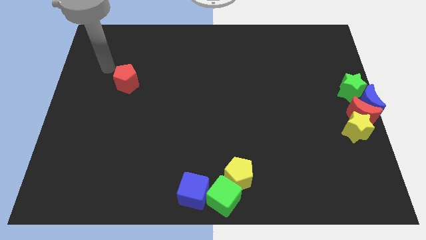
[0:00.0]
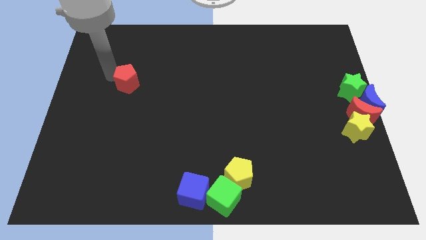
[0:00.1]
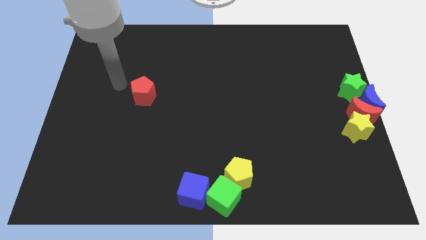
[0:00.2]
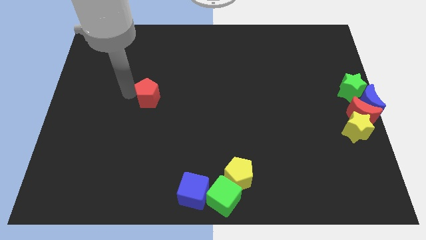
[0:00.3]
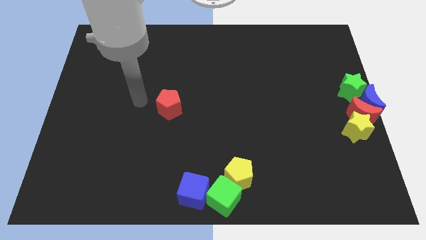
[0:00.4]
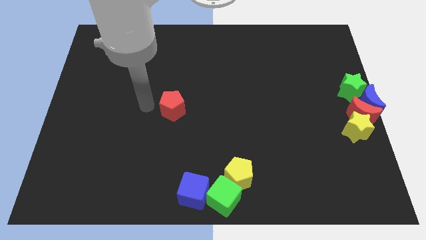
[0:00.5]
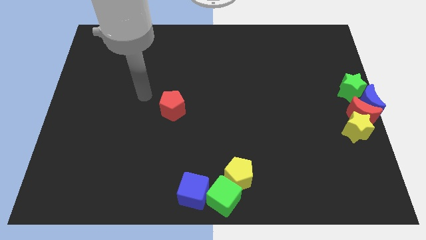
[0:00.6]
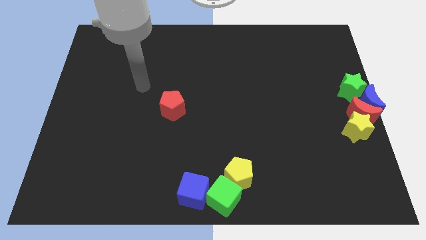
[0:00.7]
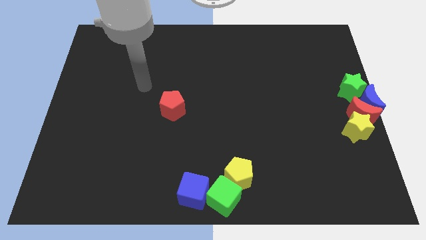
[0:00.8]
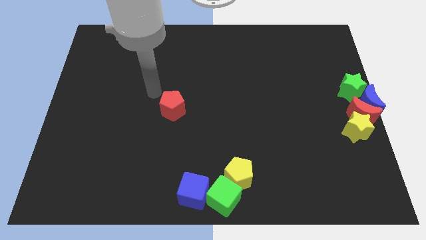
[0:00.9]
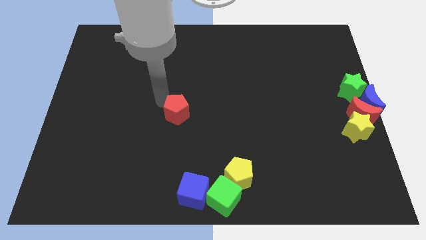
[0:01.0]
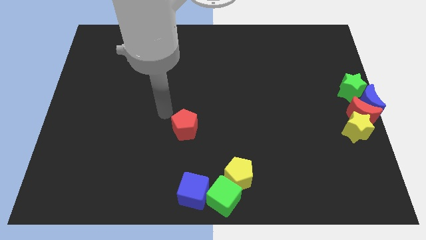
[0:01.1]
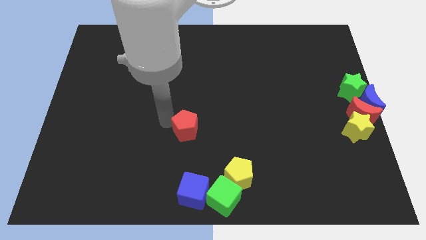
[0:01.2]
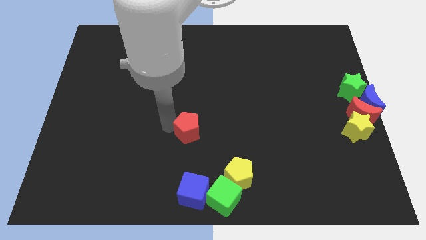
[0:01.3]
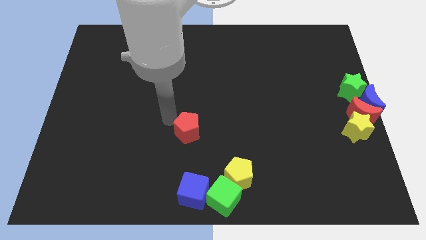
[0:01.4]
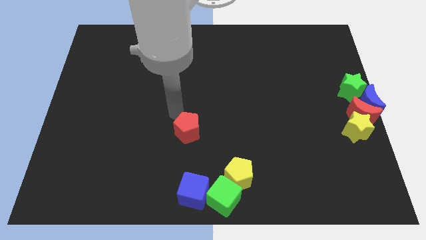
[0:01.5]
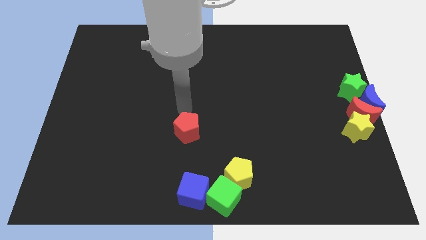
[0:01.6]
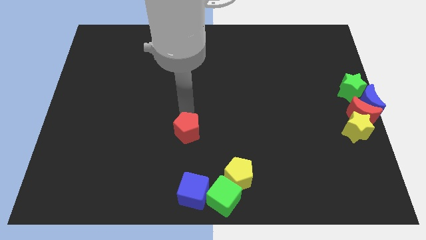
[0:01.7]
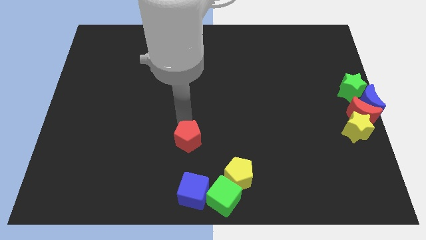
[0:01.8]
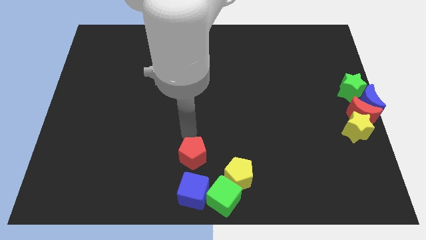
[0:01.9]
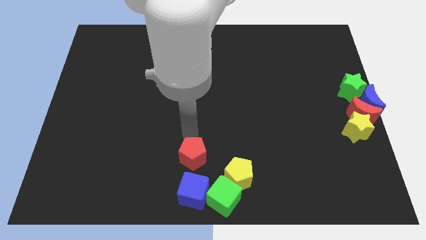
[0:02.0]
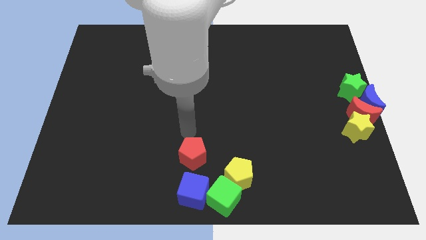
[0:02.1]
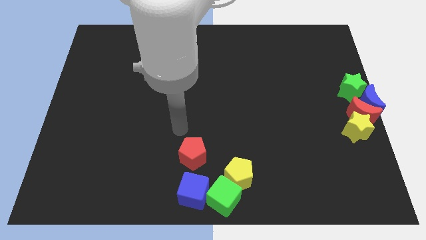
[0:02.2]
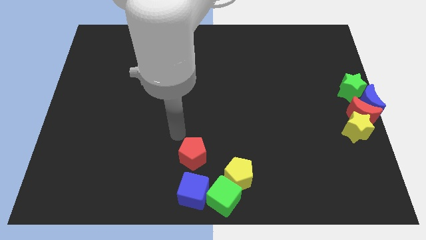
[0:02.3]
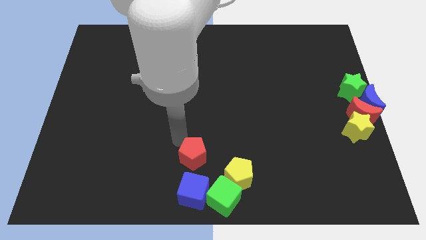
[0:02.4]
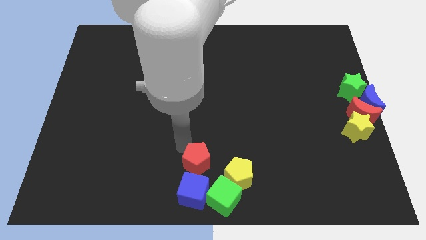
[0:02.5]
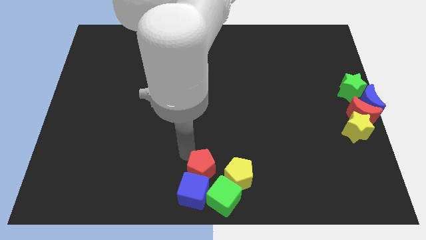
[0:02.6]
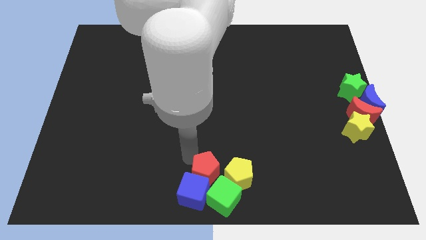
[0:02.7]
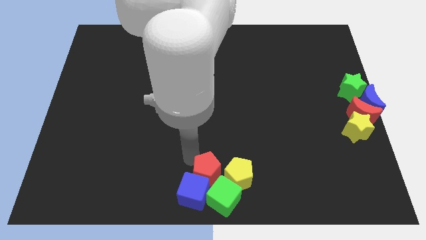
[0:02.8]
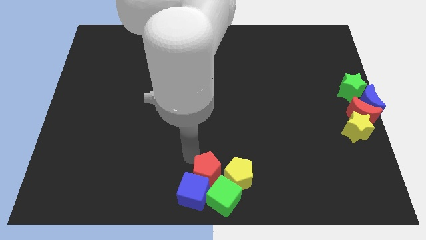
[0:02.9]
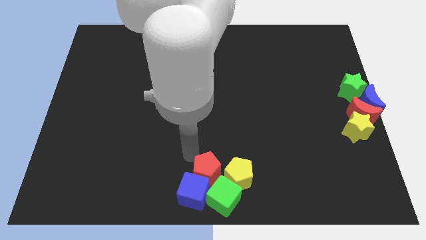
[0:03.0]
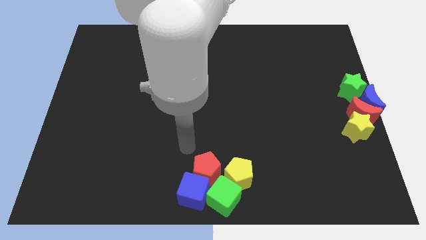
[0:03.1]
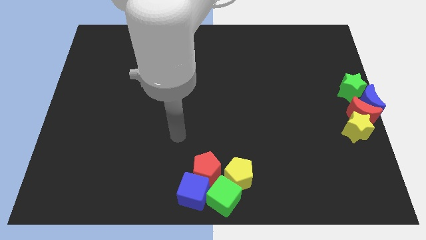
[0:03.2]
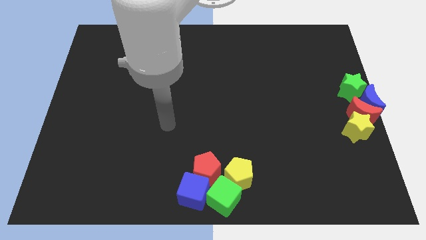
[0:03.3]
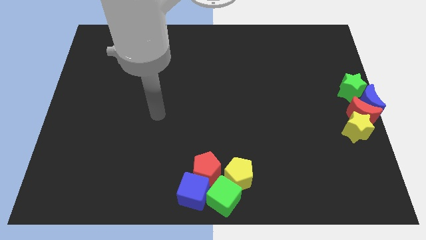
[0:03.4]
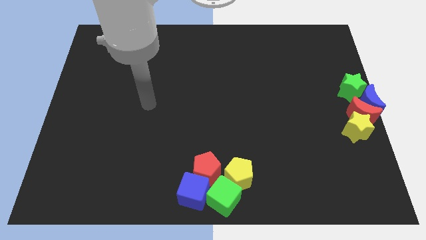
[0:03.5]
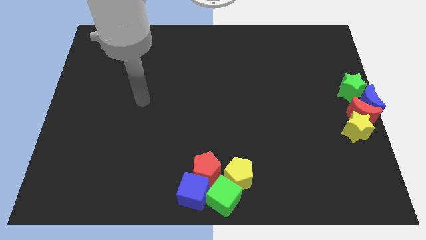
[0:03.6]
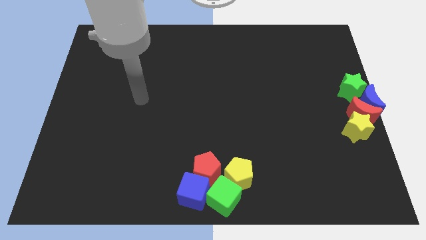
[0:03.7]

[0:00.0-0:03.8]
move the red pentagon to the top right to the blue cube

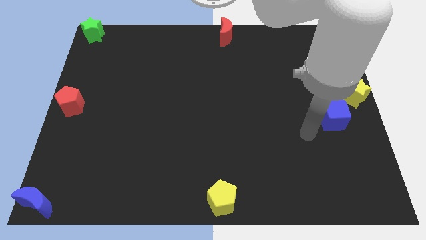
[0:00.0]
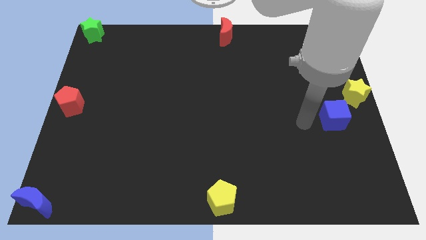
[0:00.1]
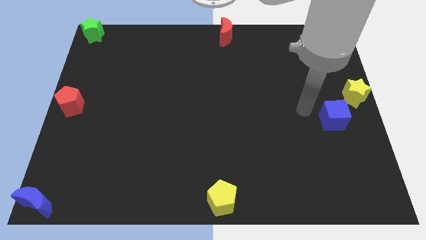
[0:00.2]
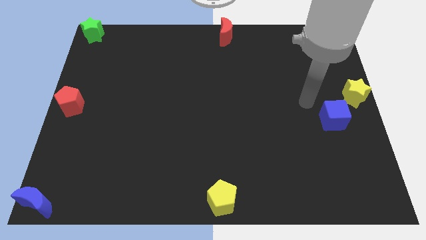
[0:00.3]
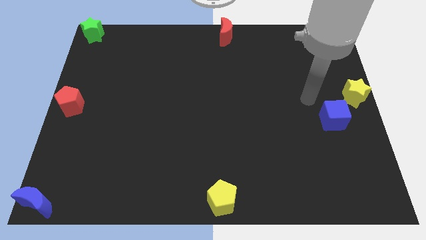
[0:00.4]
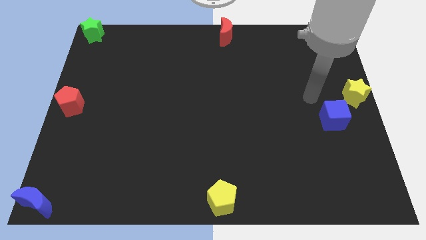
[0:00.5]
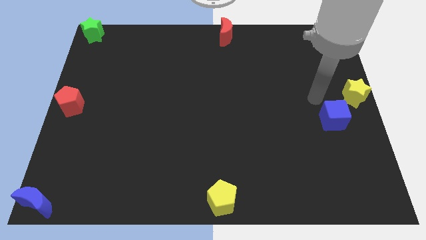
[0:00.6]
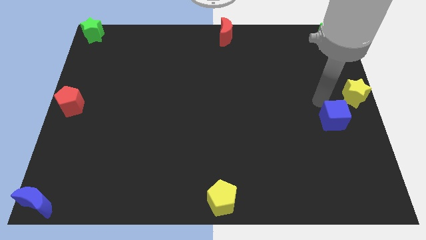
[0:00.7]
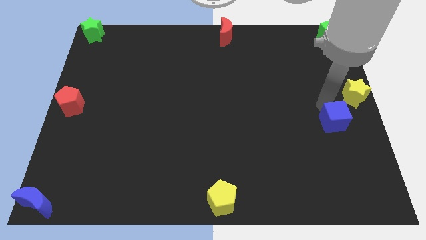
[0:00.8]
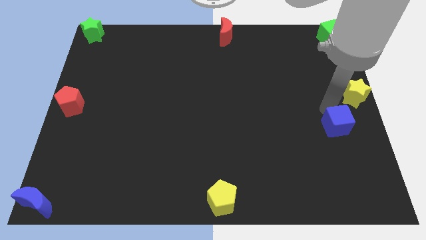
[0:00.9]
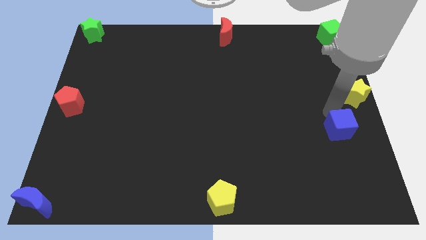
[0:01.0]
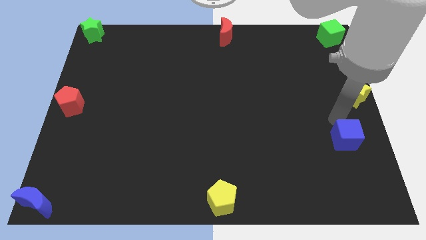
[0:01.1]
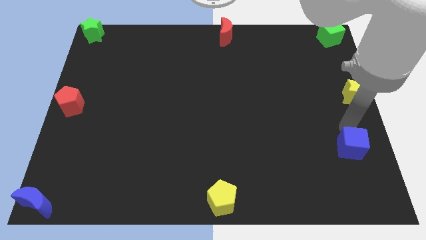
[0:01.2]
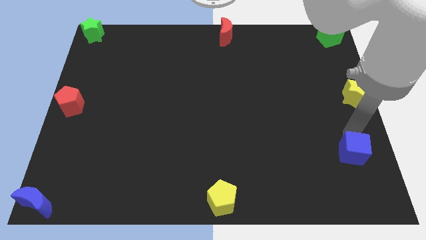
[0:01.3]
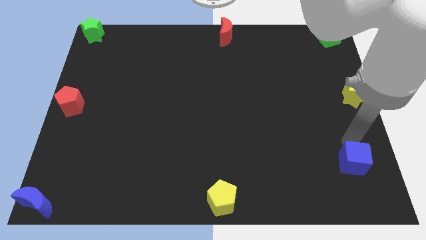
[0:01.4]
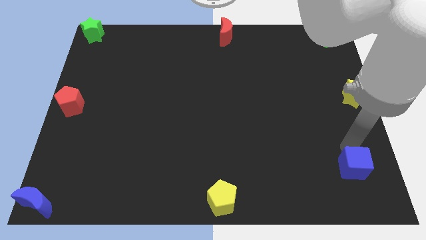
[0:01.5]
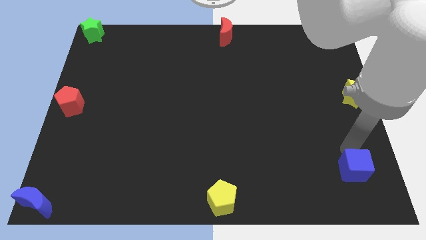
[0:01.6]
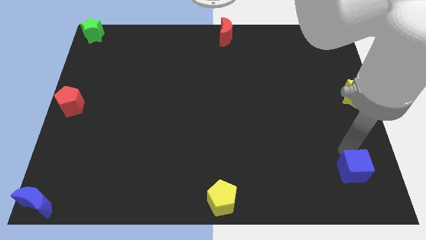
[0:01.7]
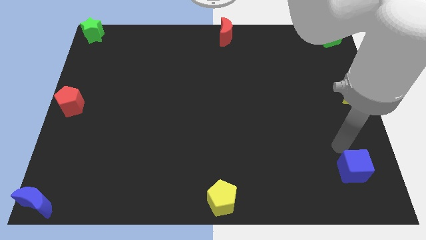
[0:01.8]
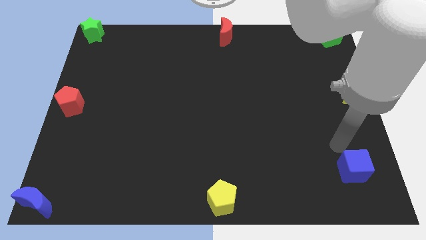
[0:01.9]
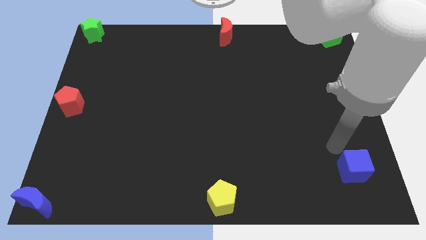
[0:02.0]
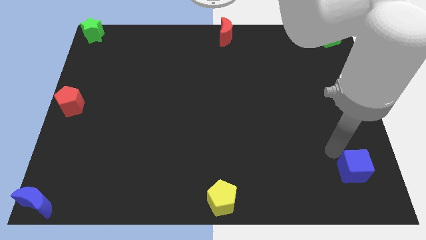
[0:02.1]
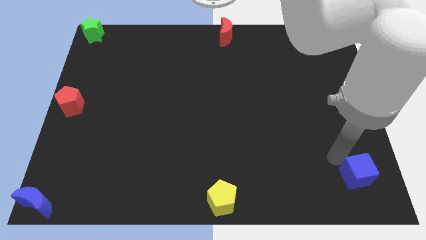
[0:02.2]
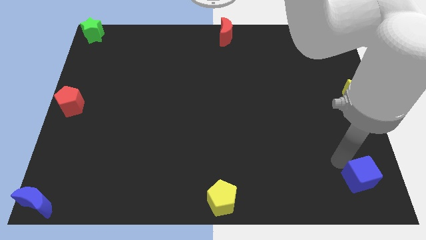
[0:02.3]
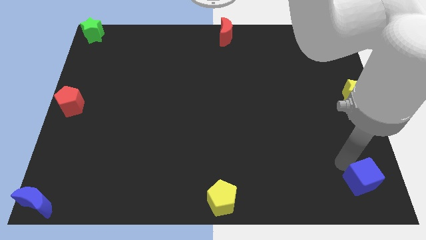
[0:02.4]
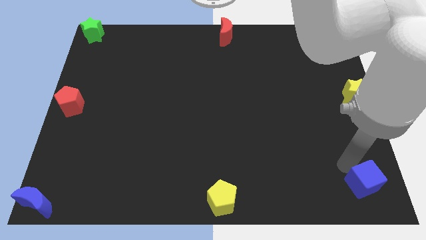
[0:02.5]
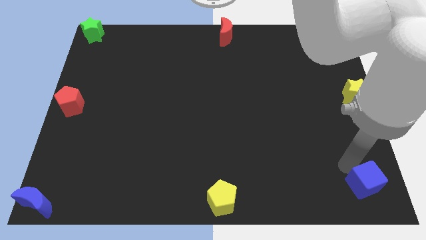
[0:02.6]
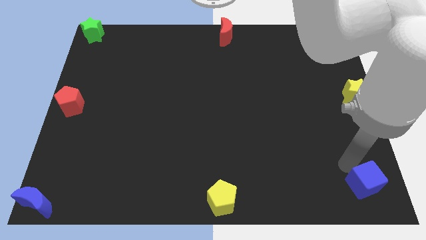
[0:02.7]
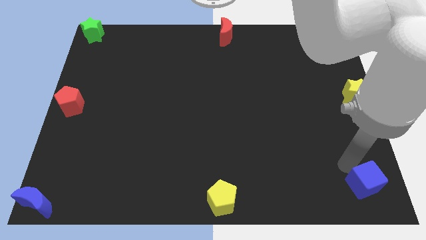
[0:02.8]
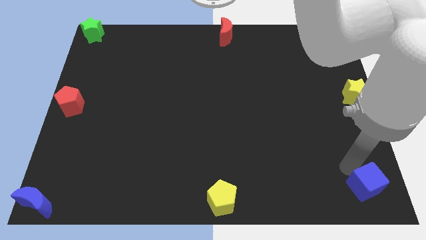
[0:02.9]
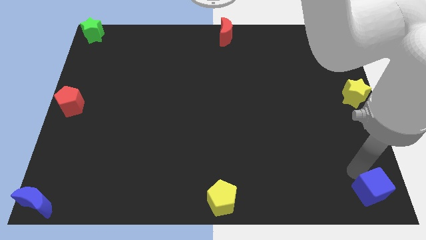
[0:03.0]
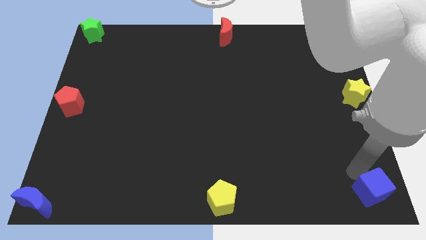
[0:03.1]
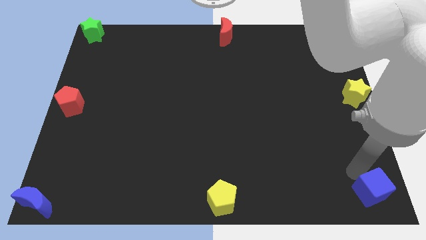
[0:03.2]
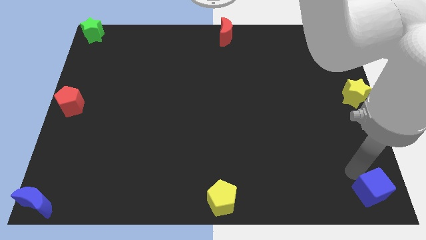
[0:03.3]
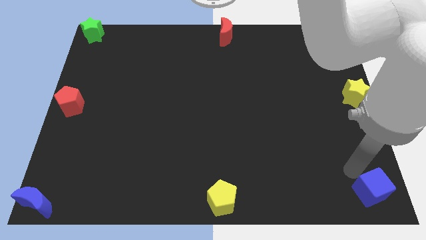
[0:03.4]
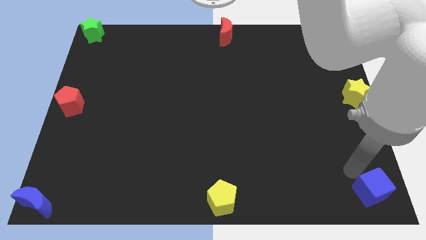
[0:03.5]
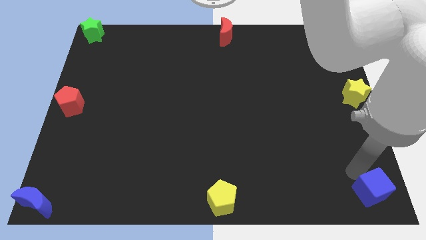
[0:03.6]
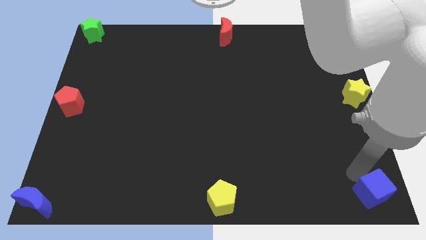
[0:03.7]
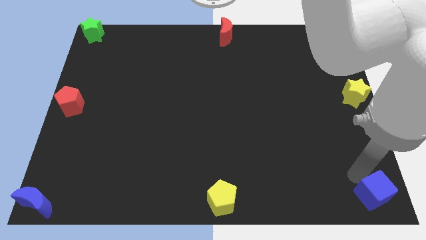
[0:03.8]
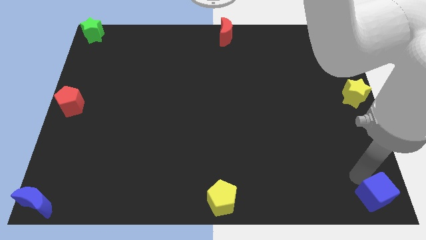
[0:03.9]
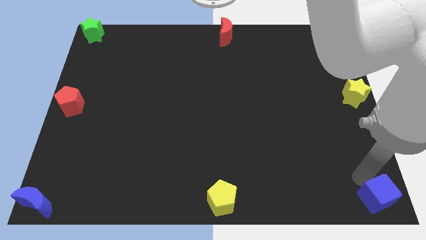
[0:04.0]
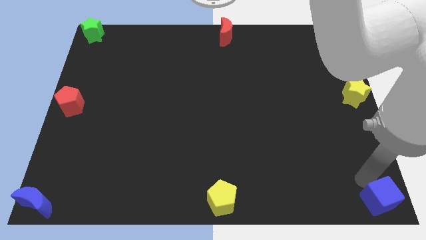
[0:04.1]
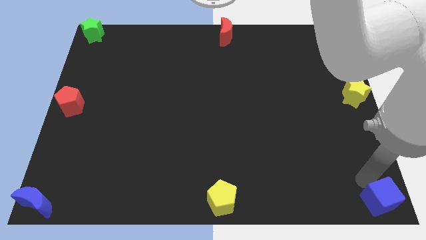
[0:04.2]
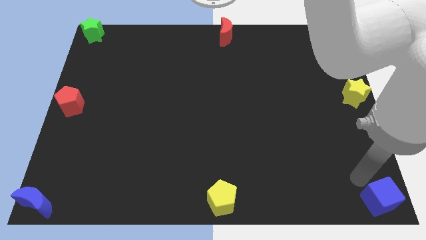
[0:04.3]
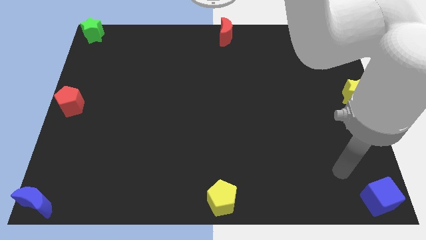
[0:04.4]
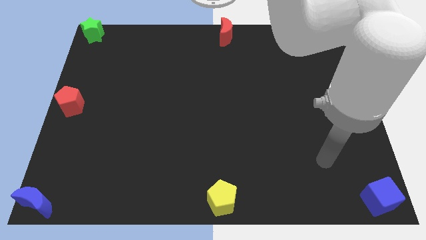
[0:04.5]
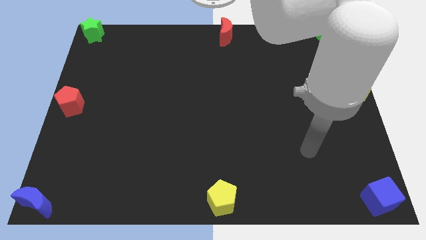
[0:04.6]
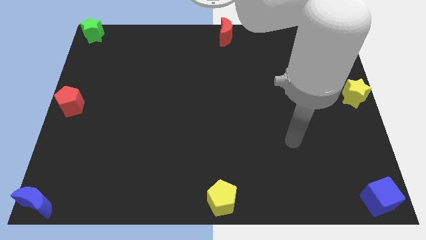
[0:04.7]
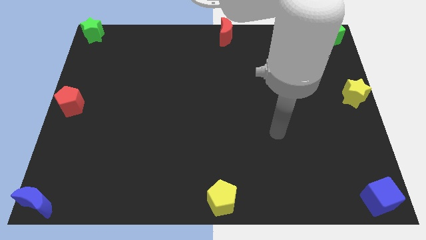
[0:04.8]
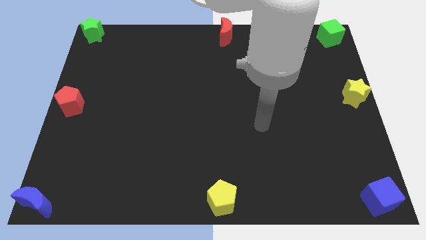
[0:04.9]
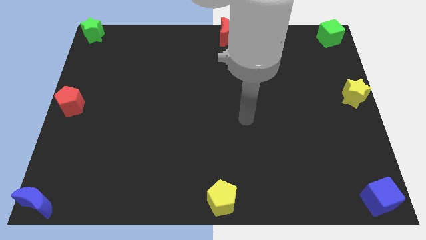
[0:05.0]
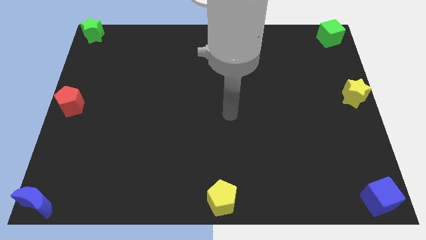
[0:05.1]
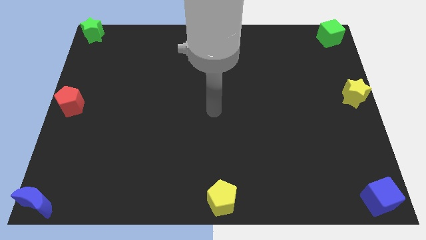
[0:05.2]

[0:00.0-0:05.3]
place blue cube to the bottom right corner of the board
